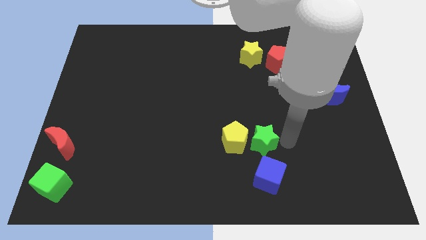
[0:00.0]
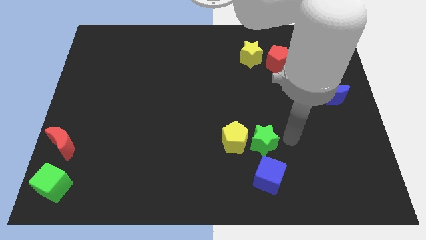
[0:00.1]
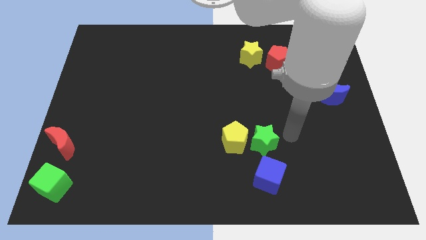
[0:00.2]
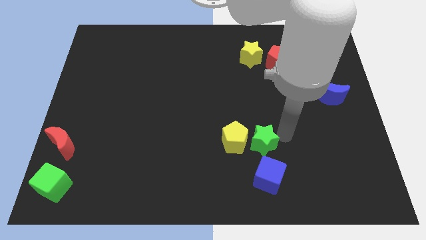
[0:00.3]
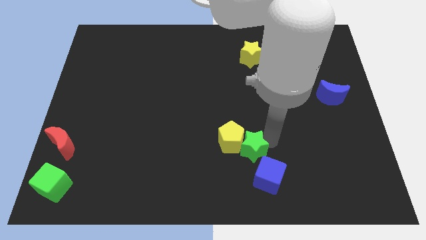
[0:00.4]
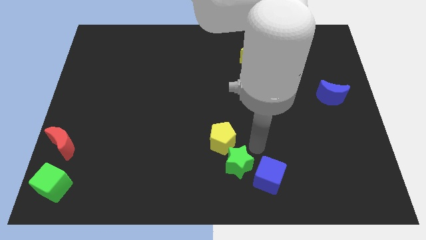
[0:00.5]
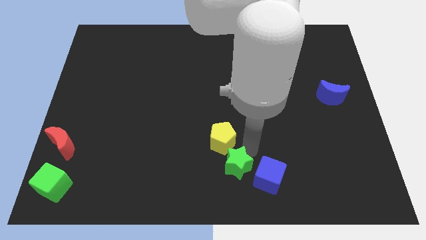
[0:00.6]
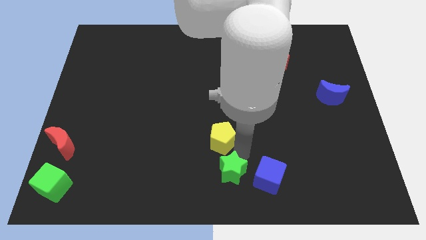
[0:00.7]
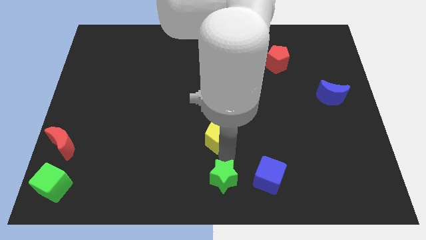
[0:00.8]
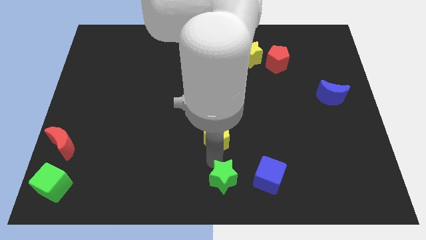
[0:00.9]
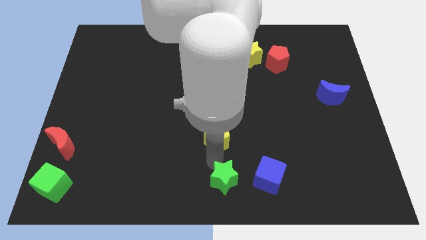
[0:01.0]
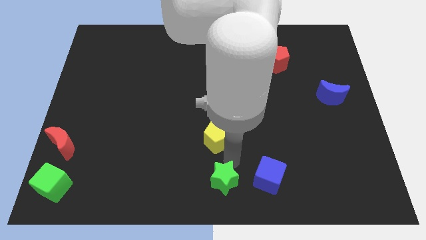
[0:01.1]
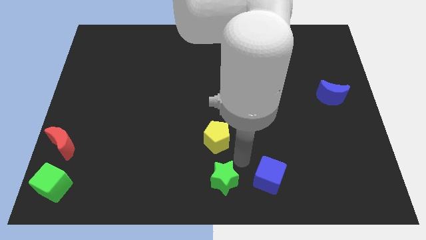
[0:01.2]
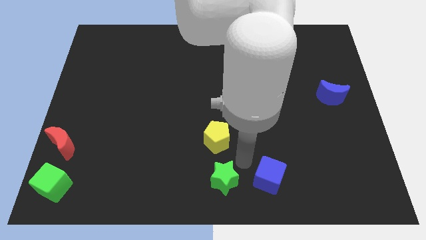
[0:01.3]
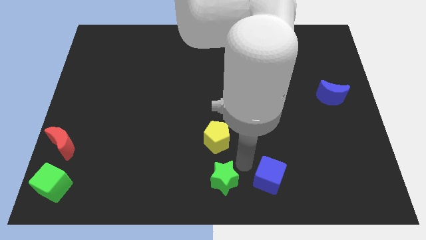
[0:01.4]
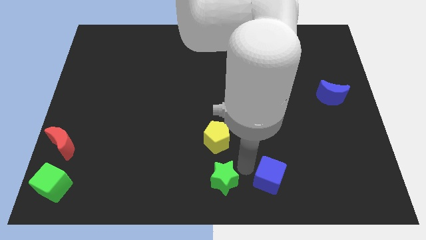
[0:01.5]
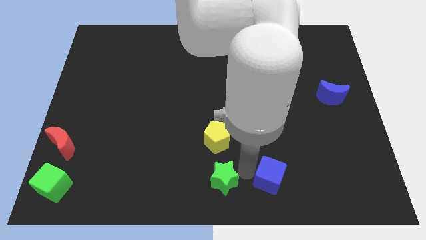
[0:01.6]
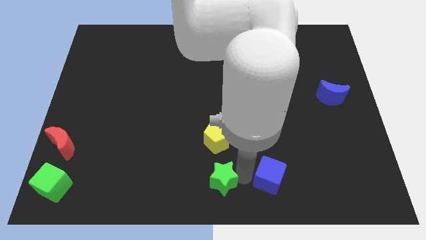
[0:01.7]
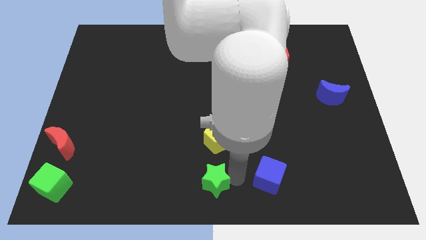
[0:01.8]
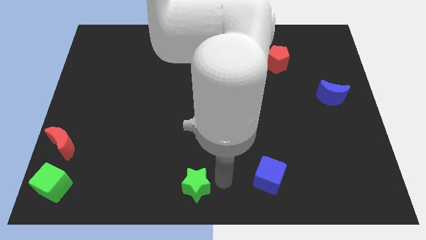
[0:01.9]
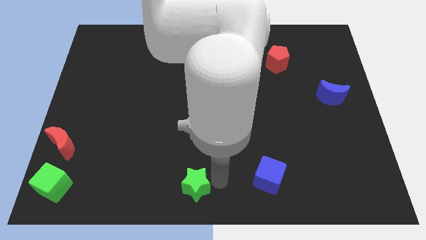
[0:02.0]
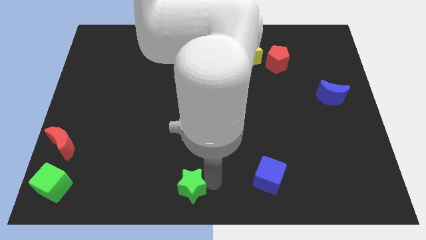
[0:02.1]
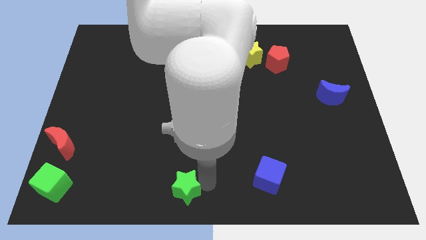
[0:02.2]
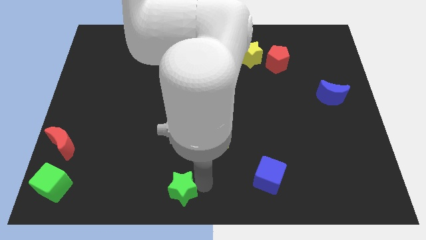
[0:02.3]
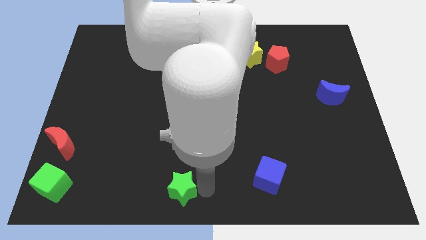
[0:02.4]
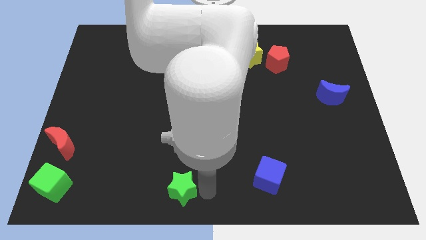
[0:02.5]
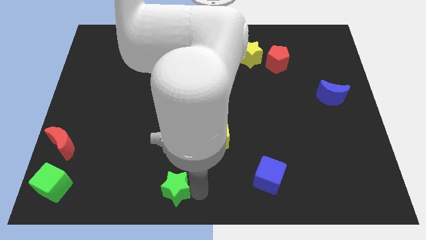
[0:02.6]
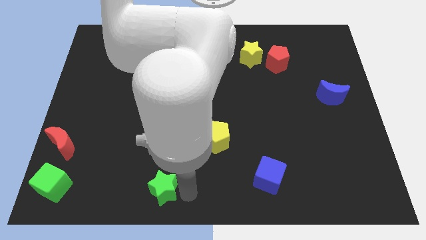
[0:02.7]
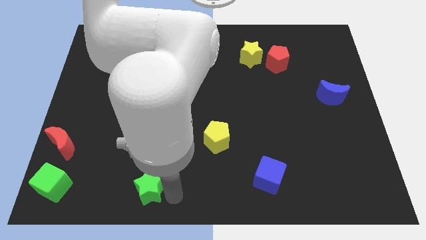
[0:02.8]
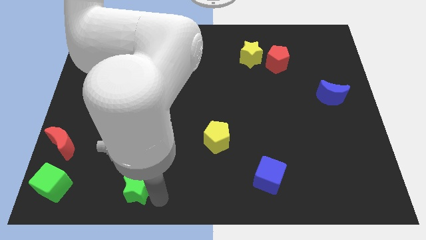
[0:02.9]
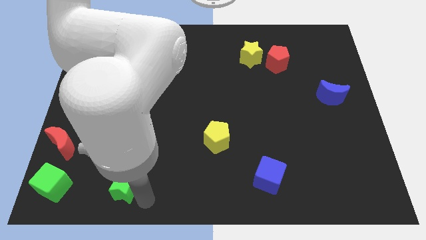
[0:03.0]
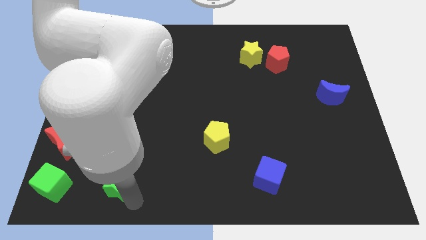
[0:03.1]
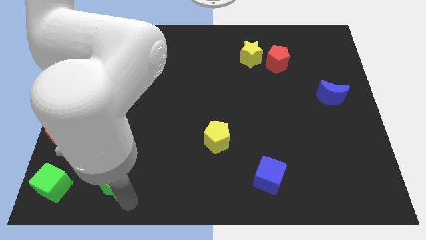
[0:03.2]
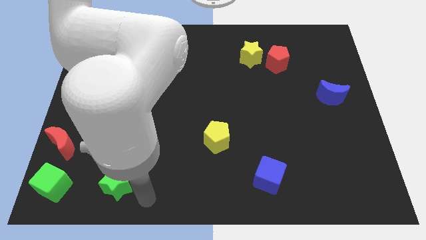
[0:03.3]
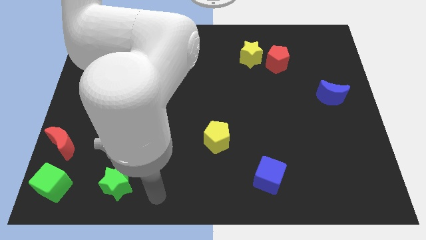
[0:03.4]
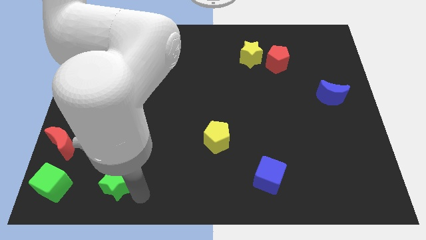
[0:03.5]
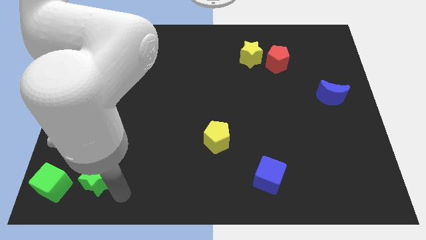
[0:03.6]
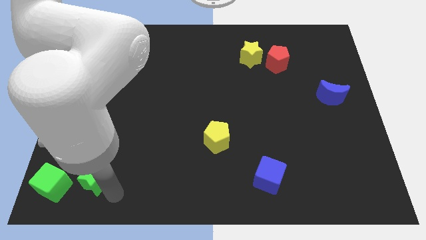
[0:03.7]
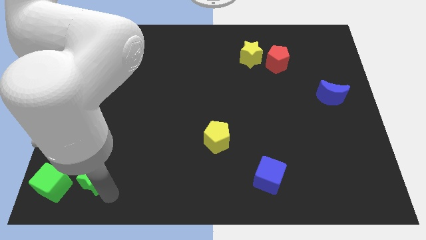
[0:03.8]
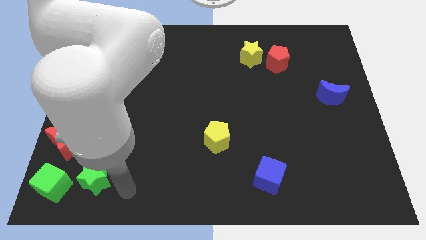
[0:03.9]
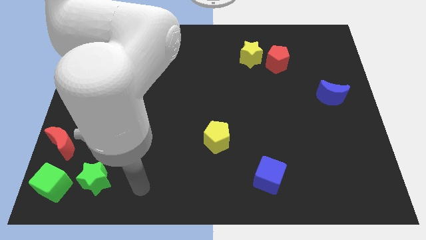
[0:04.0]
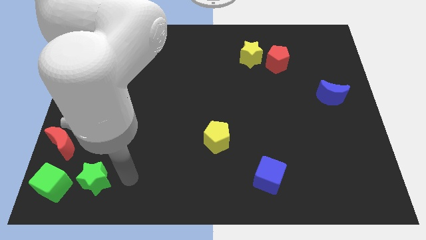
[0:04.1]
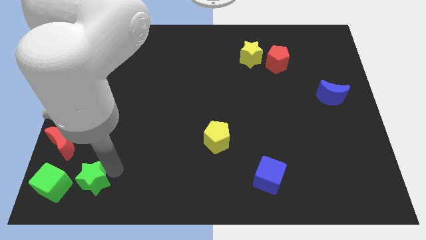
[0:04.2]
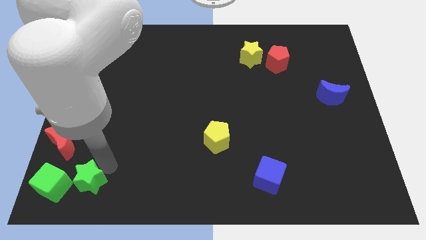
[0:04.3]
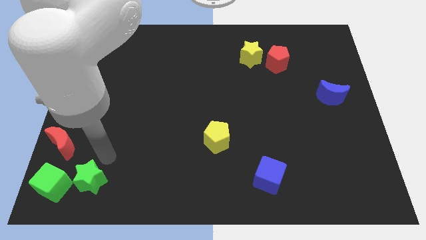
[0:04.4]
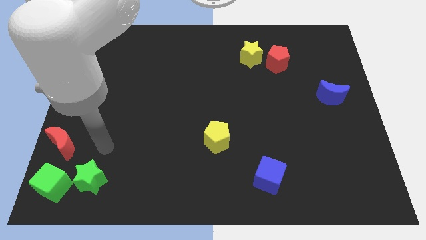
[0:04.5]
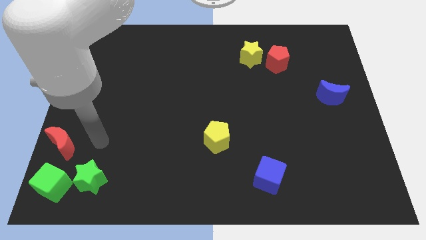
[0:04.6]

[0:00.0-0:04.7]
push the green star towards the green cube

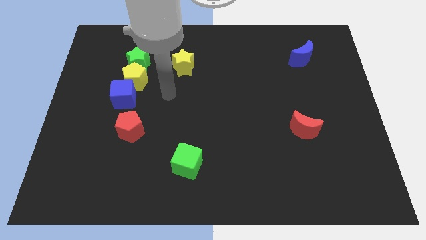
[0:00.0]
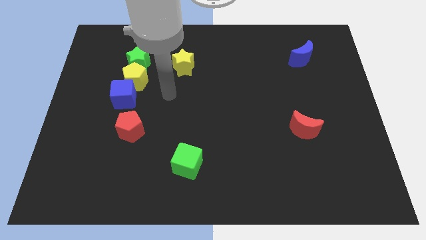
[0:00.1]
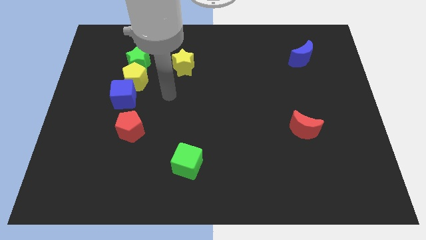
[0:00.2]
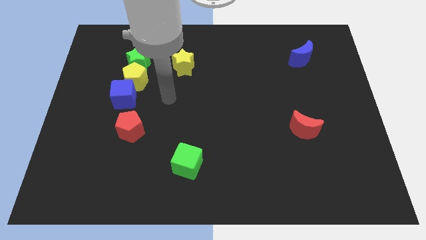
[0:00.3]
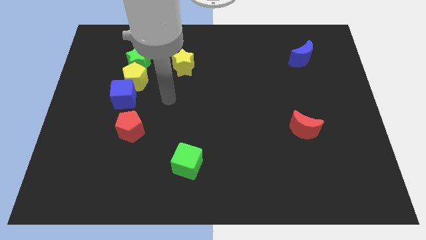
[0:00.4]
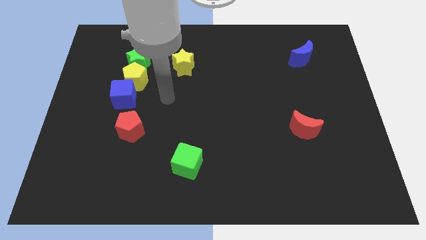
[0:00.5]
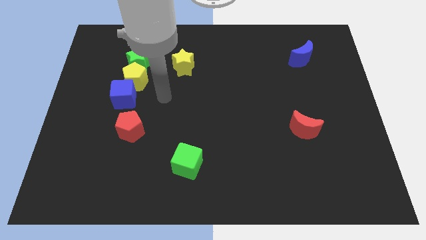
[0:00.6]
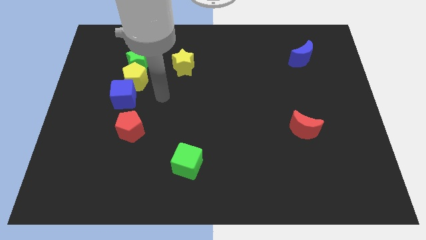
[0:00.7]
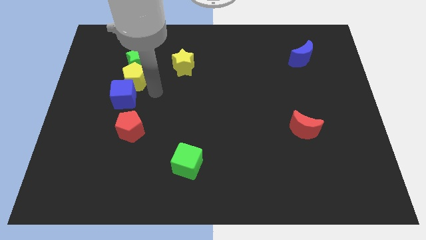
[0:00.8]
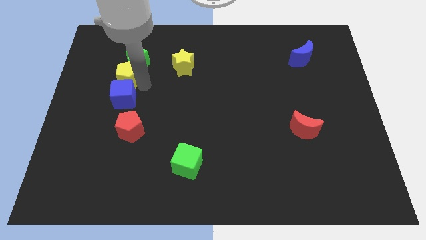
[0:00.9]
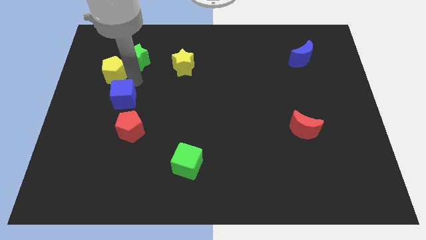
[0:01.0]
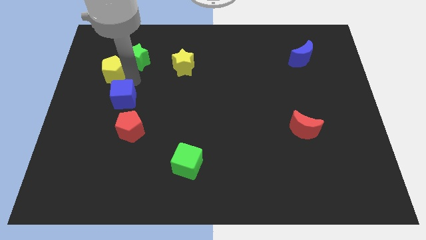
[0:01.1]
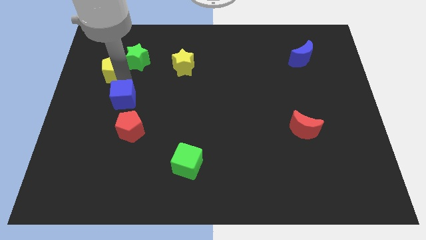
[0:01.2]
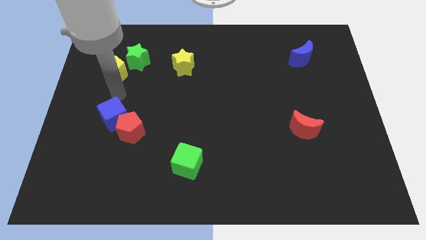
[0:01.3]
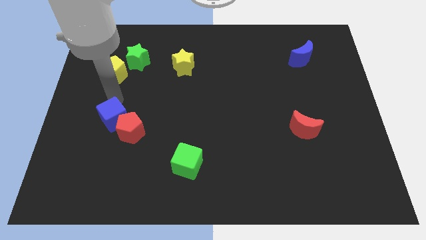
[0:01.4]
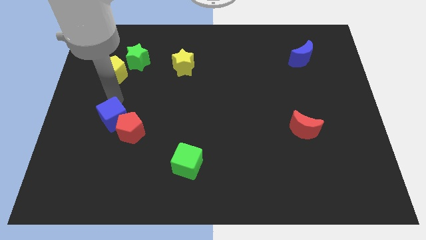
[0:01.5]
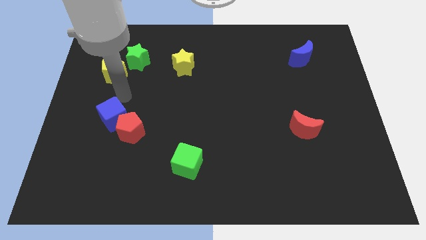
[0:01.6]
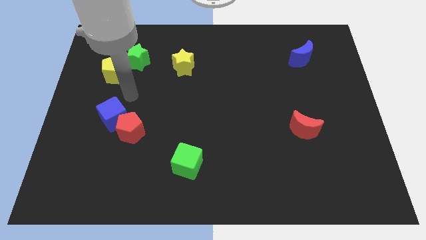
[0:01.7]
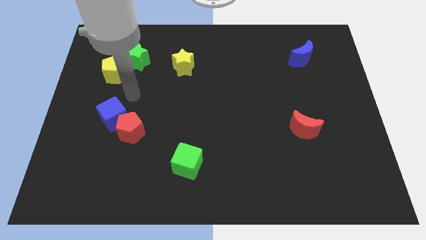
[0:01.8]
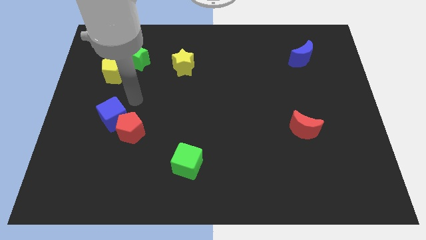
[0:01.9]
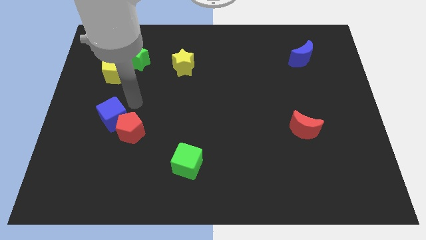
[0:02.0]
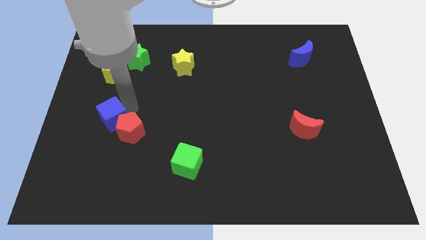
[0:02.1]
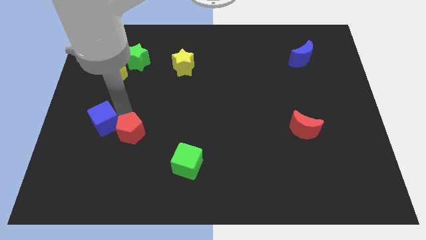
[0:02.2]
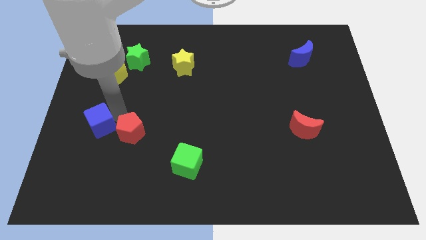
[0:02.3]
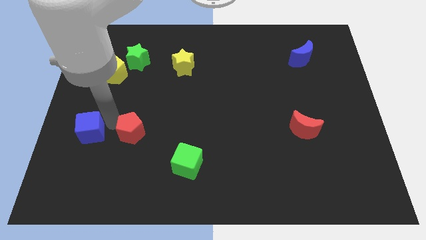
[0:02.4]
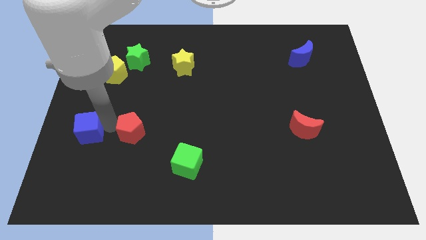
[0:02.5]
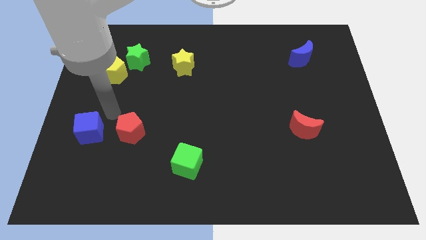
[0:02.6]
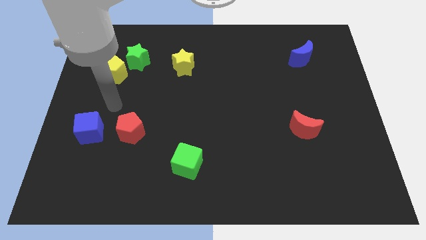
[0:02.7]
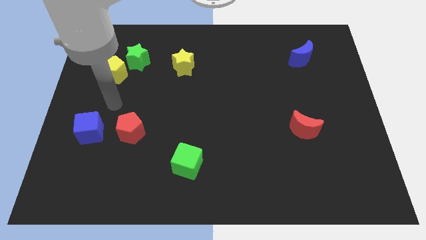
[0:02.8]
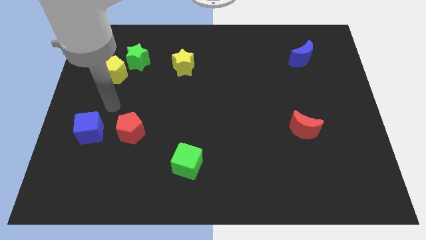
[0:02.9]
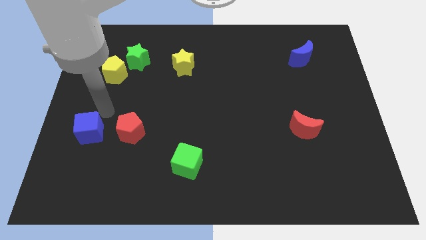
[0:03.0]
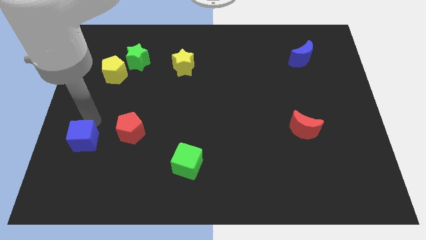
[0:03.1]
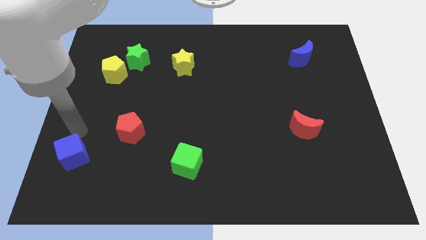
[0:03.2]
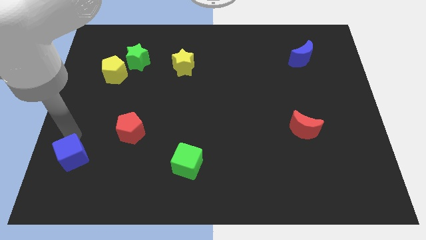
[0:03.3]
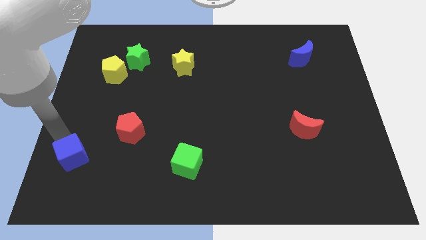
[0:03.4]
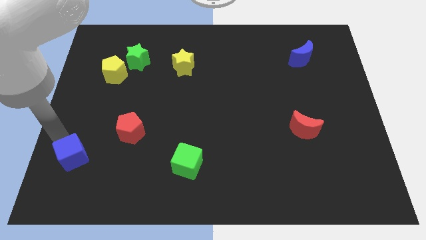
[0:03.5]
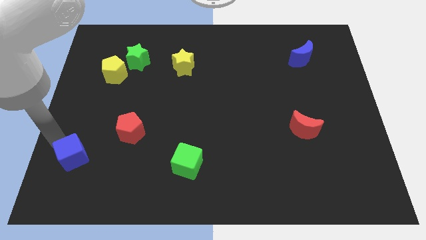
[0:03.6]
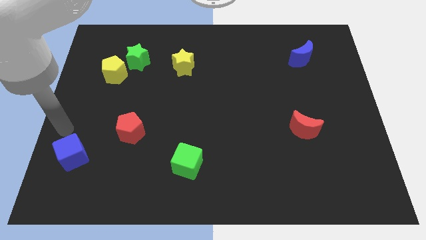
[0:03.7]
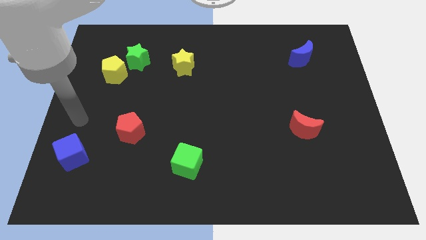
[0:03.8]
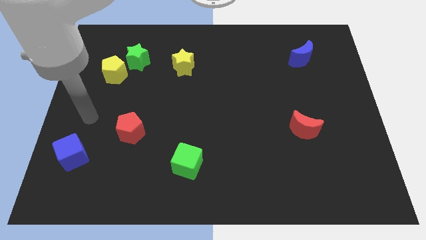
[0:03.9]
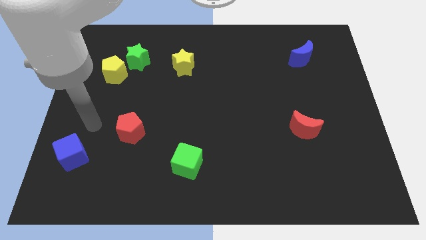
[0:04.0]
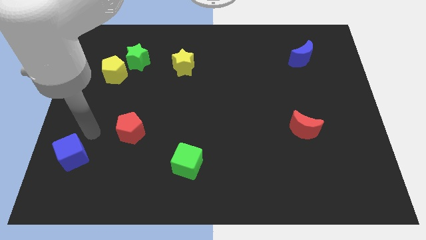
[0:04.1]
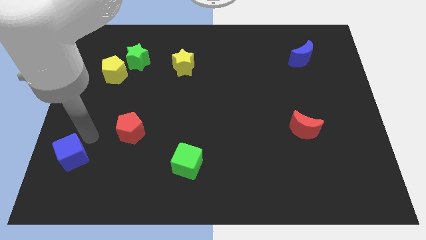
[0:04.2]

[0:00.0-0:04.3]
separate the blue cube and the yellow pentagon
